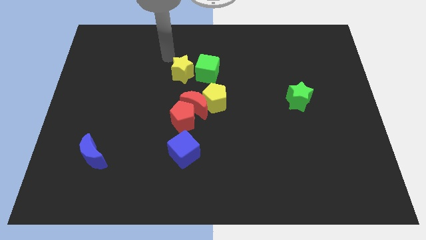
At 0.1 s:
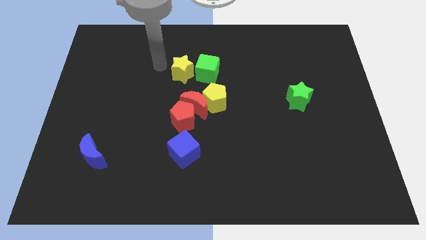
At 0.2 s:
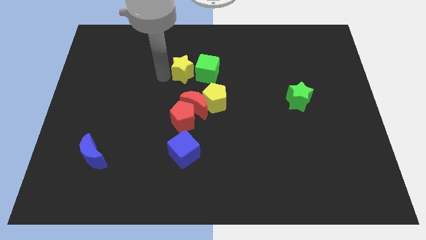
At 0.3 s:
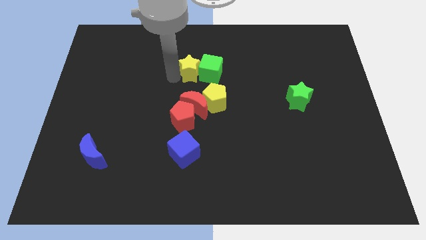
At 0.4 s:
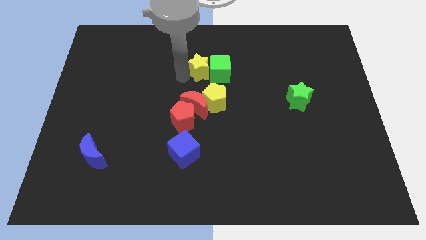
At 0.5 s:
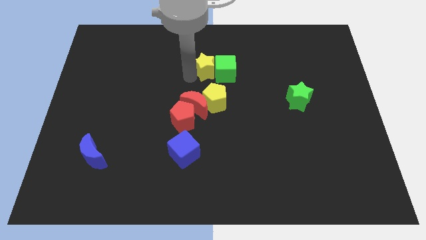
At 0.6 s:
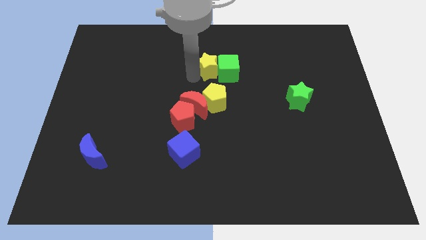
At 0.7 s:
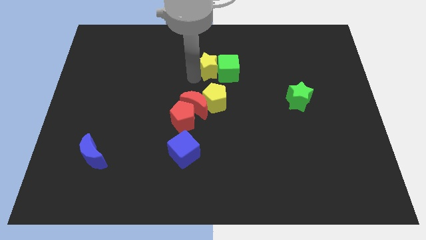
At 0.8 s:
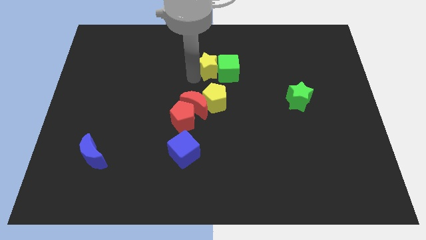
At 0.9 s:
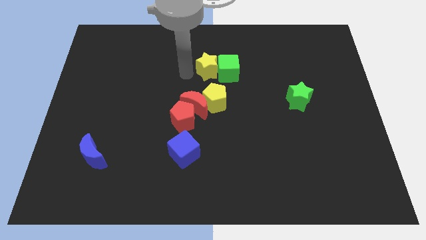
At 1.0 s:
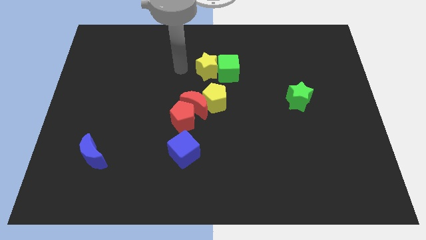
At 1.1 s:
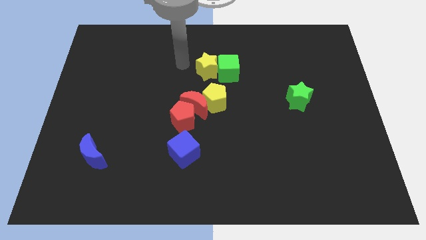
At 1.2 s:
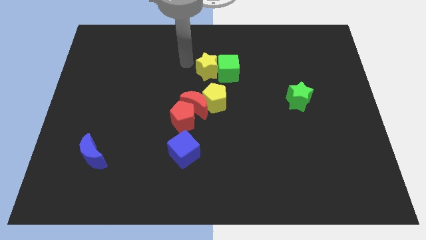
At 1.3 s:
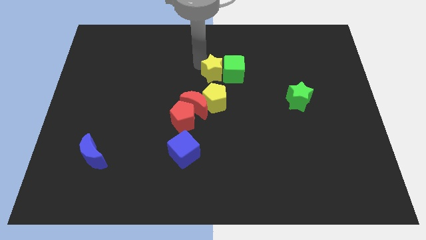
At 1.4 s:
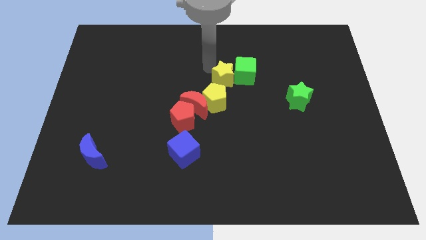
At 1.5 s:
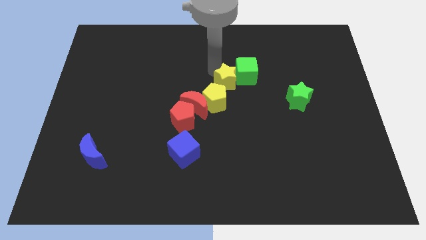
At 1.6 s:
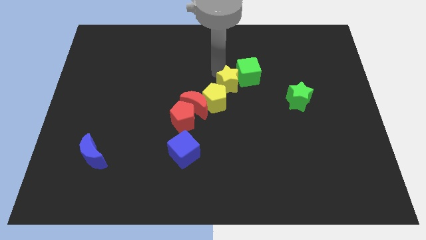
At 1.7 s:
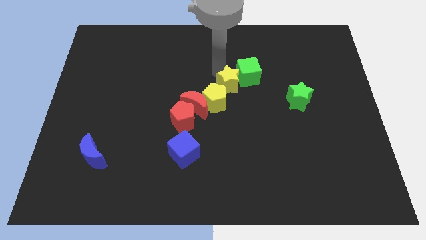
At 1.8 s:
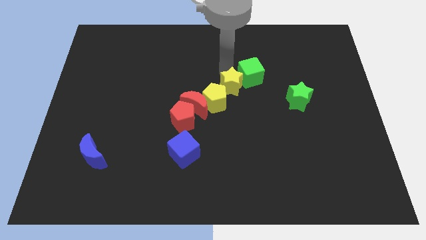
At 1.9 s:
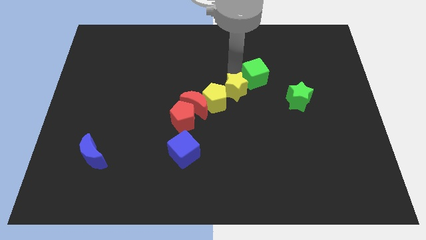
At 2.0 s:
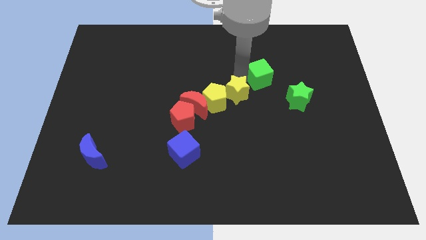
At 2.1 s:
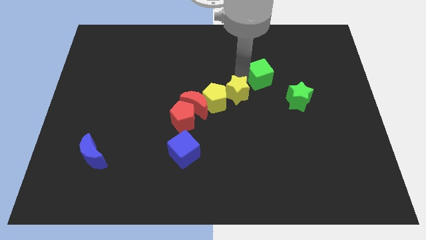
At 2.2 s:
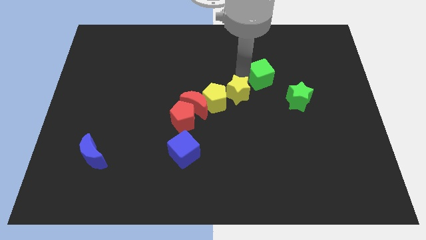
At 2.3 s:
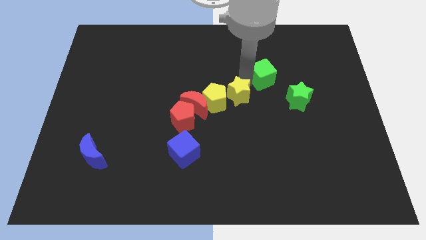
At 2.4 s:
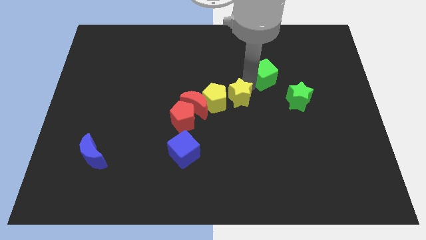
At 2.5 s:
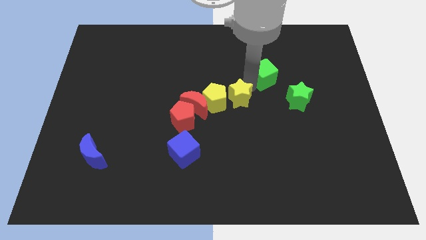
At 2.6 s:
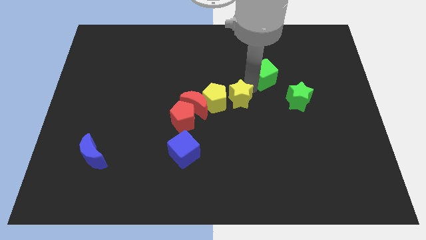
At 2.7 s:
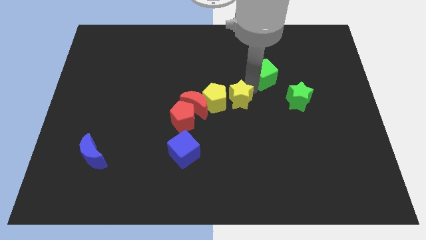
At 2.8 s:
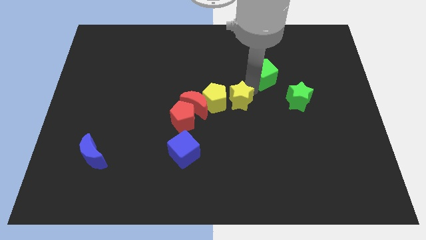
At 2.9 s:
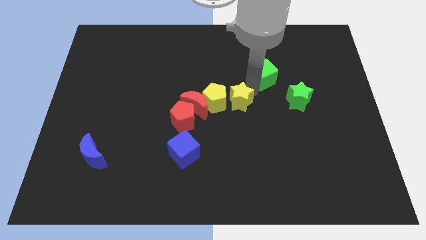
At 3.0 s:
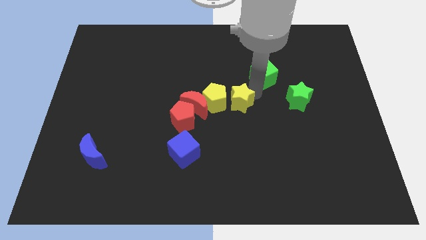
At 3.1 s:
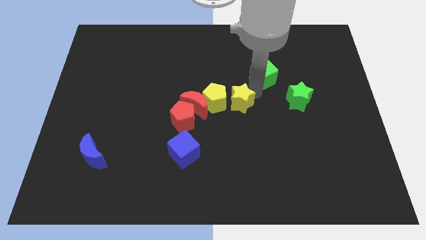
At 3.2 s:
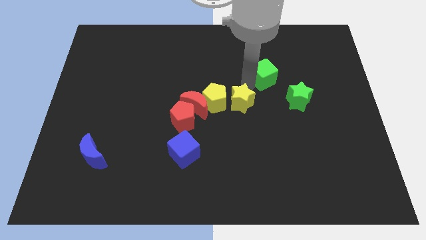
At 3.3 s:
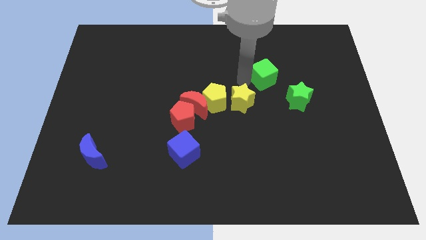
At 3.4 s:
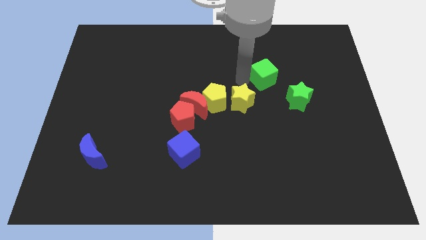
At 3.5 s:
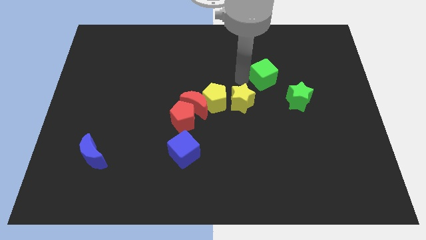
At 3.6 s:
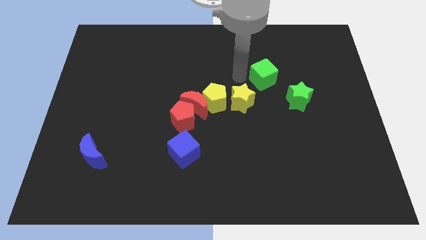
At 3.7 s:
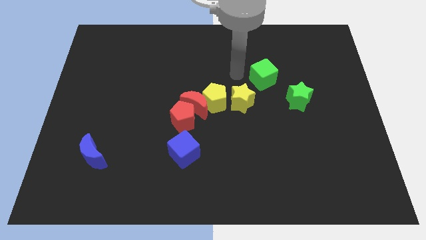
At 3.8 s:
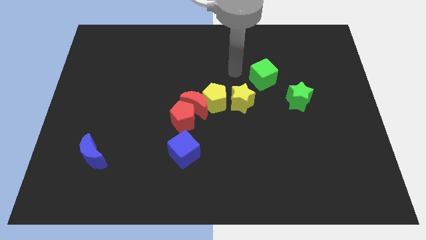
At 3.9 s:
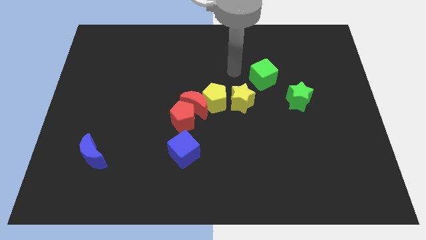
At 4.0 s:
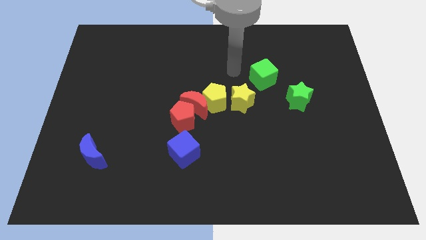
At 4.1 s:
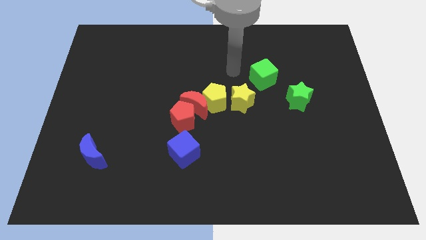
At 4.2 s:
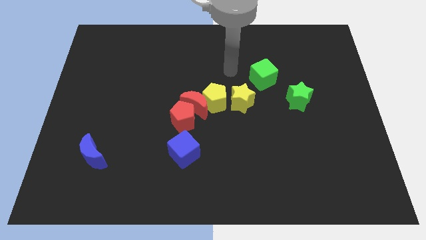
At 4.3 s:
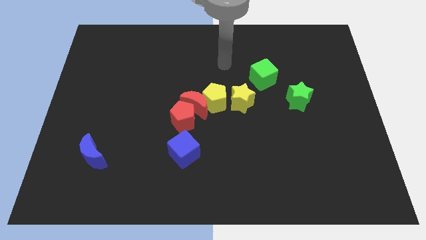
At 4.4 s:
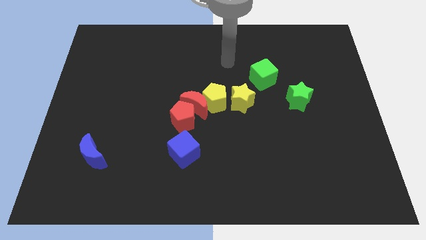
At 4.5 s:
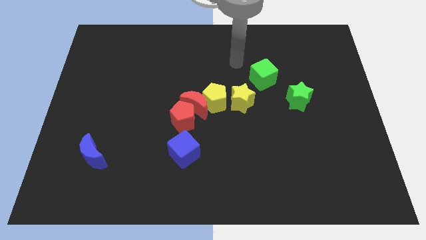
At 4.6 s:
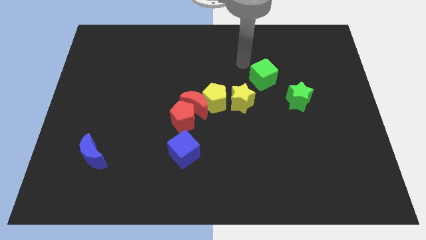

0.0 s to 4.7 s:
push the yellow star to the right of the yellow pentagon

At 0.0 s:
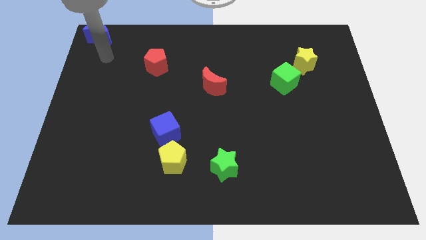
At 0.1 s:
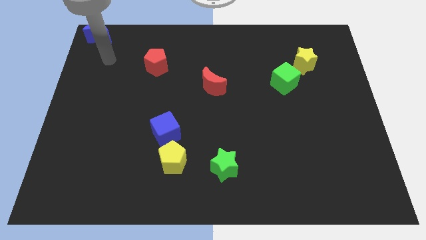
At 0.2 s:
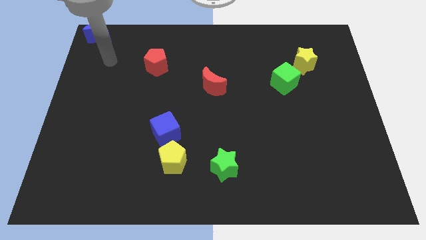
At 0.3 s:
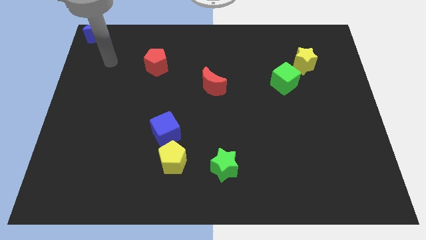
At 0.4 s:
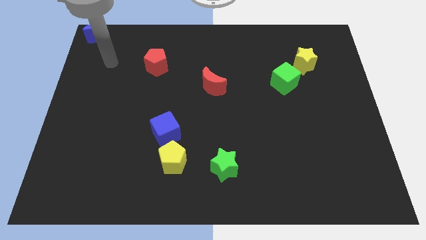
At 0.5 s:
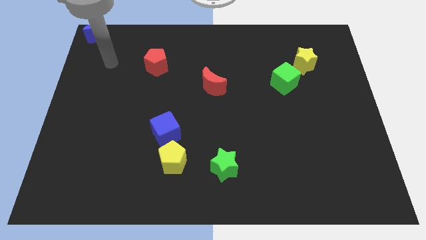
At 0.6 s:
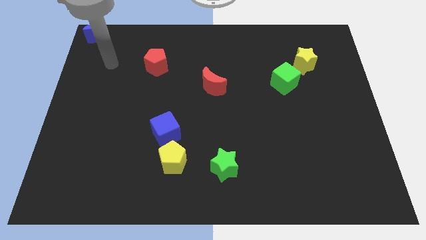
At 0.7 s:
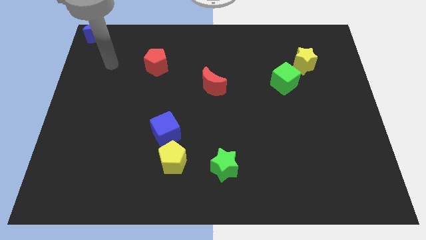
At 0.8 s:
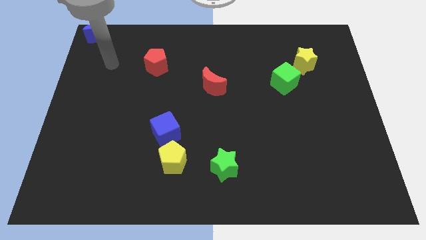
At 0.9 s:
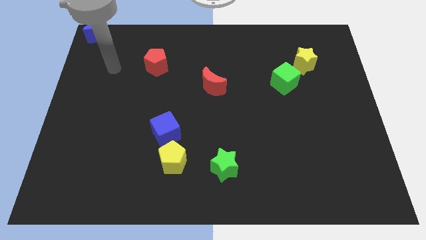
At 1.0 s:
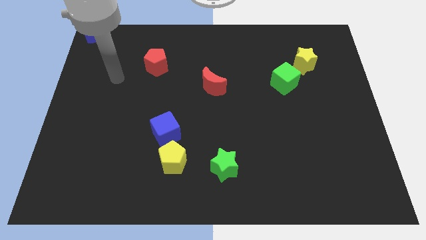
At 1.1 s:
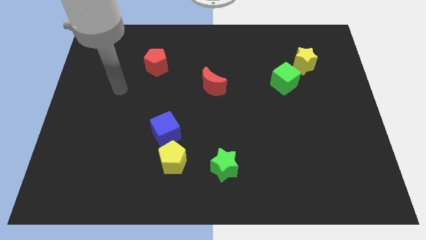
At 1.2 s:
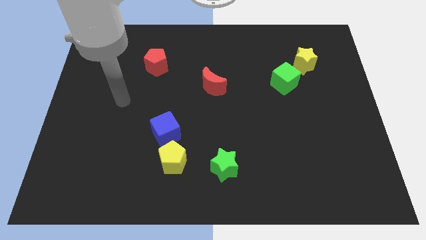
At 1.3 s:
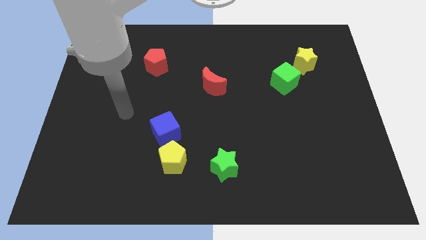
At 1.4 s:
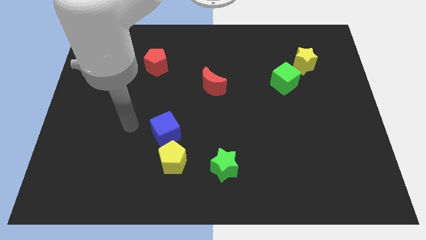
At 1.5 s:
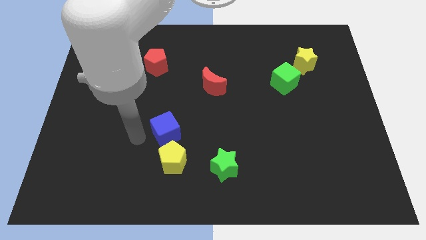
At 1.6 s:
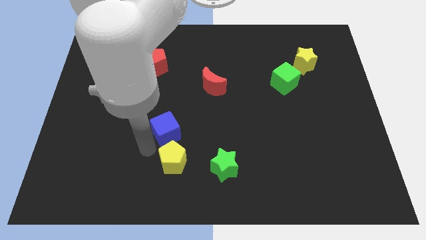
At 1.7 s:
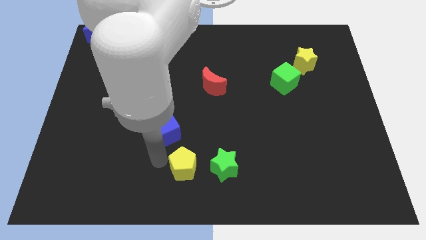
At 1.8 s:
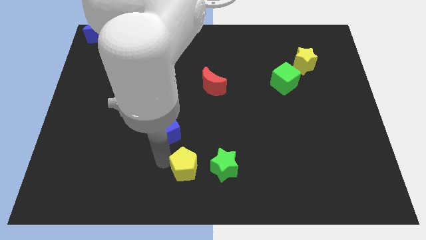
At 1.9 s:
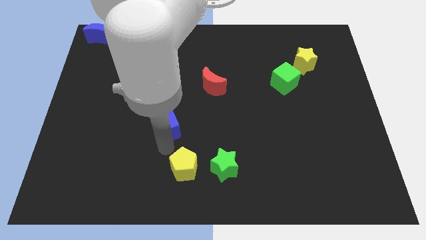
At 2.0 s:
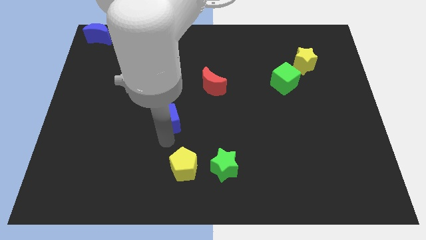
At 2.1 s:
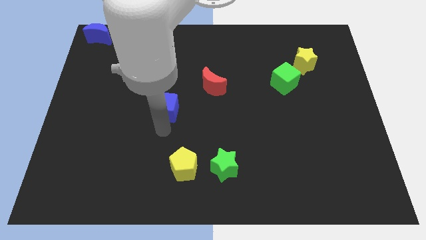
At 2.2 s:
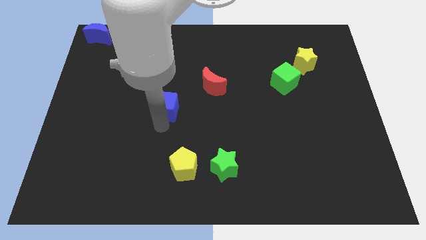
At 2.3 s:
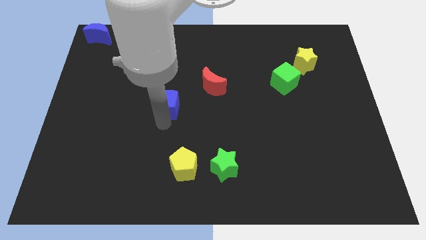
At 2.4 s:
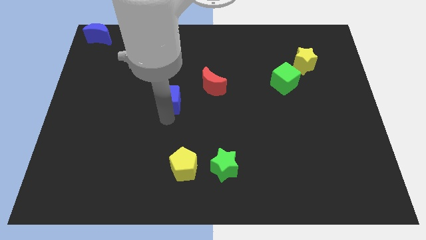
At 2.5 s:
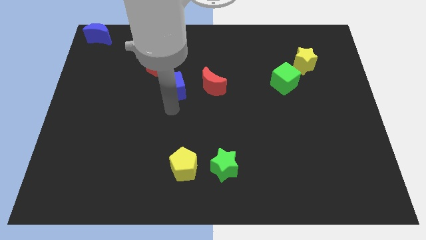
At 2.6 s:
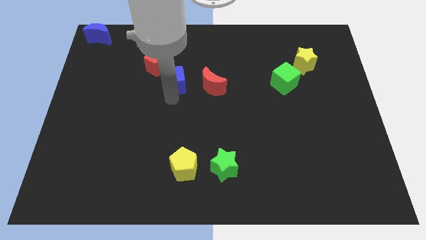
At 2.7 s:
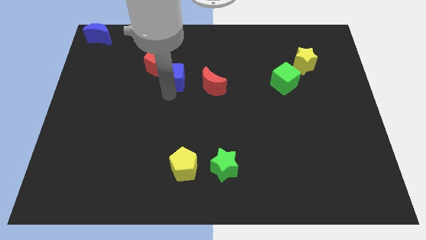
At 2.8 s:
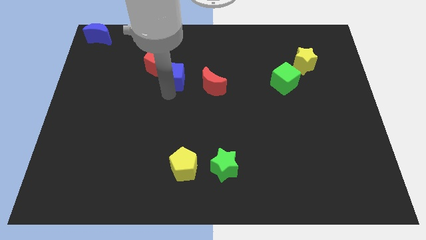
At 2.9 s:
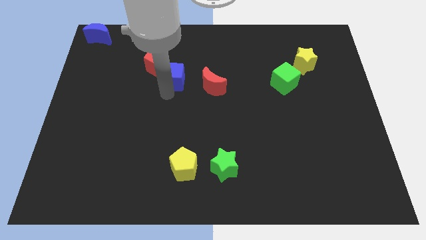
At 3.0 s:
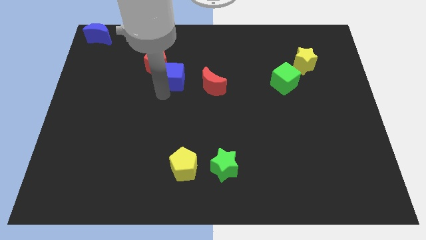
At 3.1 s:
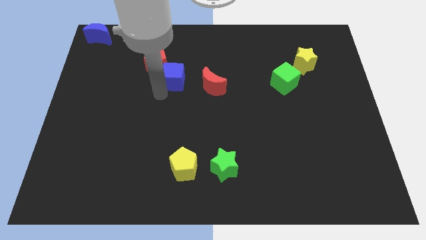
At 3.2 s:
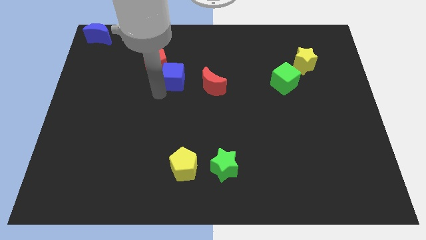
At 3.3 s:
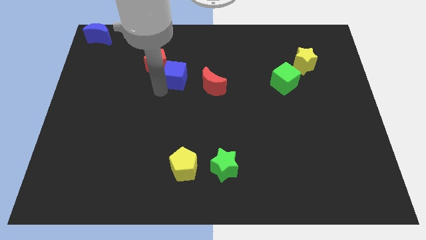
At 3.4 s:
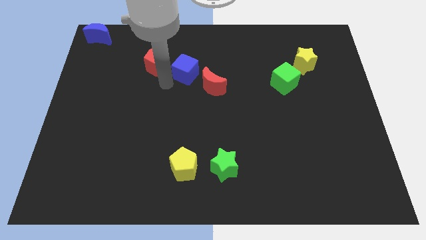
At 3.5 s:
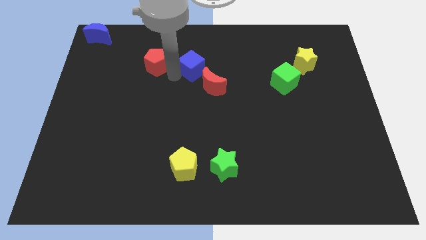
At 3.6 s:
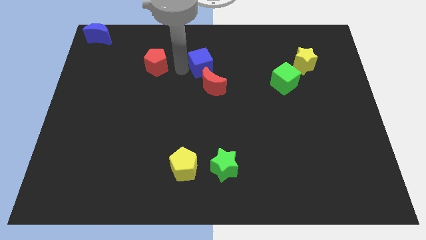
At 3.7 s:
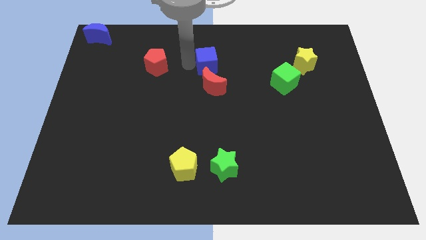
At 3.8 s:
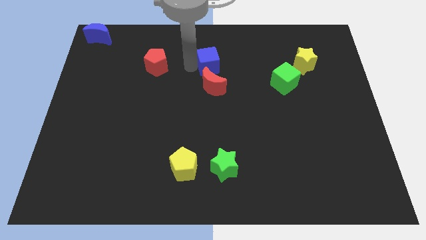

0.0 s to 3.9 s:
separate the blue cube from the yellow pentagon

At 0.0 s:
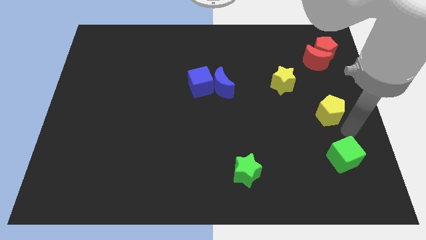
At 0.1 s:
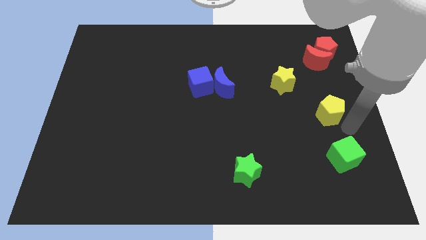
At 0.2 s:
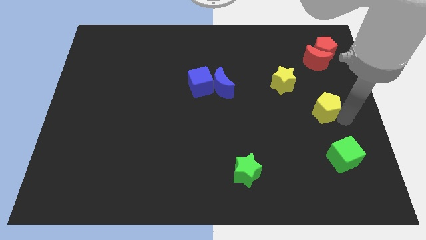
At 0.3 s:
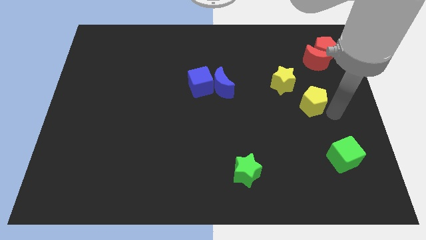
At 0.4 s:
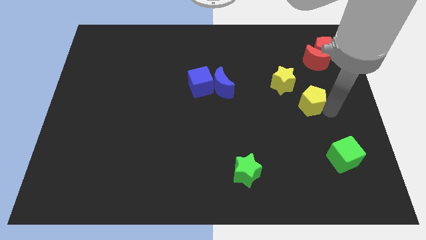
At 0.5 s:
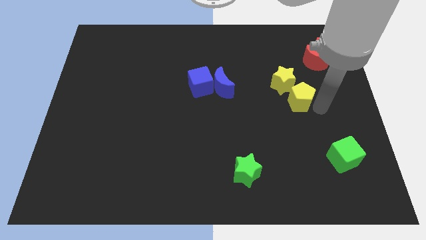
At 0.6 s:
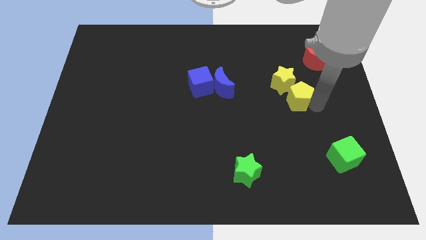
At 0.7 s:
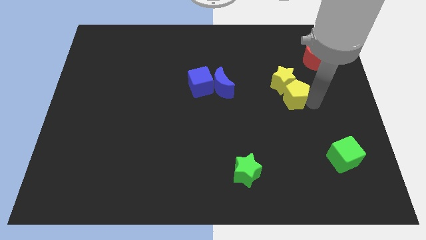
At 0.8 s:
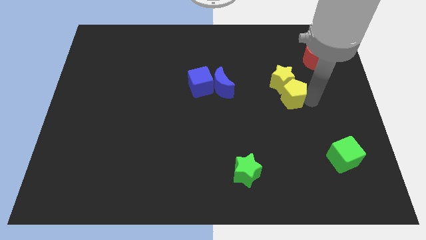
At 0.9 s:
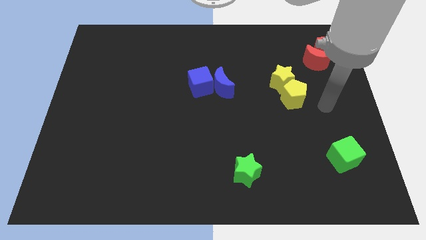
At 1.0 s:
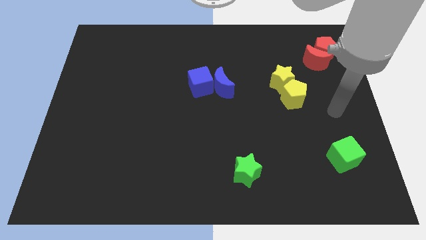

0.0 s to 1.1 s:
move the yellow pentagon into the bottom side of the yellow star
